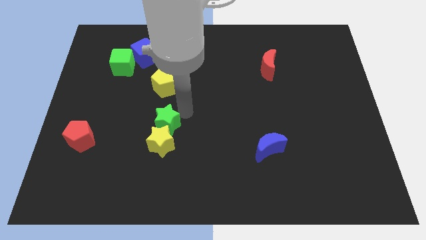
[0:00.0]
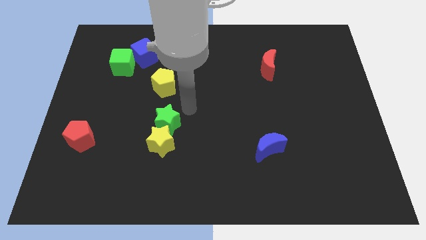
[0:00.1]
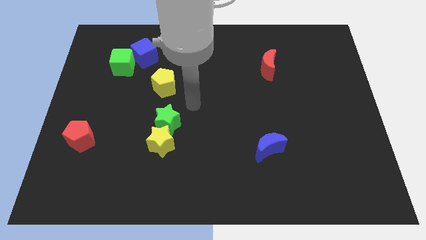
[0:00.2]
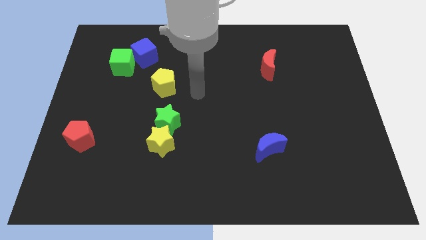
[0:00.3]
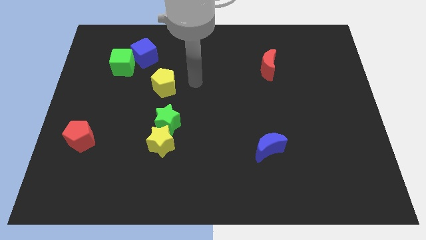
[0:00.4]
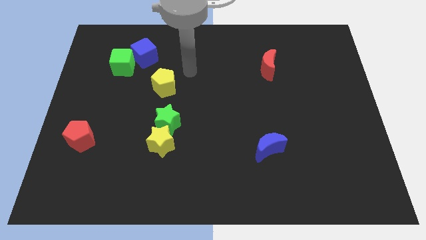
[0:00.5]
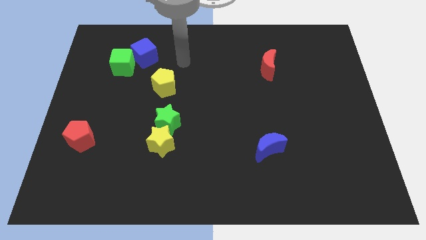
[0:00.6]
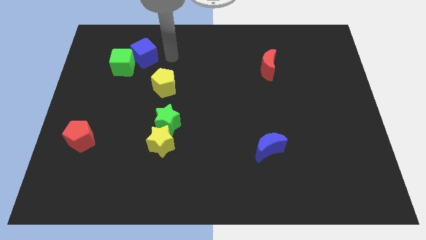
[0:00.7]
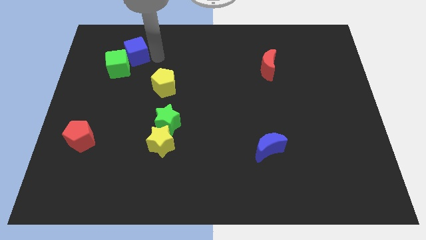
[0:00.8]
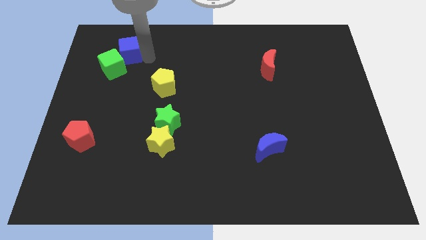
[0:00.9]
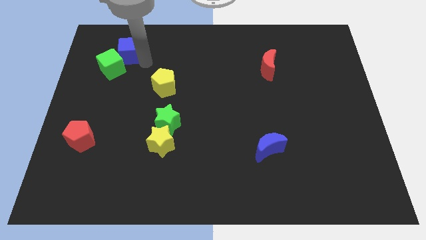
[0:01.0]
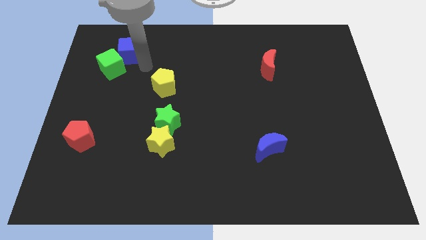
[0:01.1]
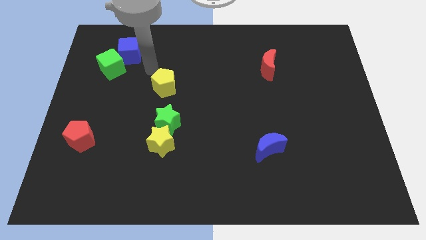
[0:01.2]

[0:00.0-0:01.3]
slightly push the blue cube along with the green cube to the left

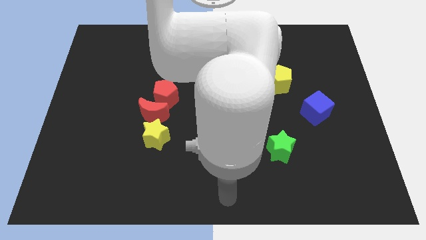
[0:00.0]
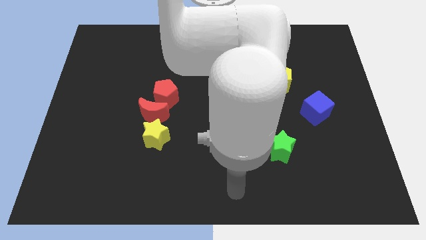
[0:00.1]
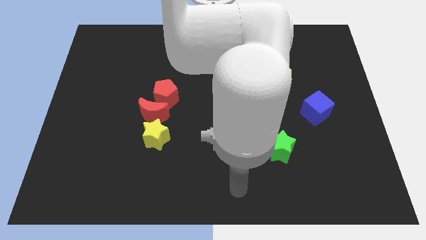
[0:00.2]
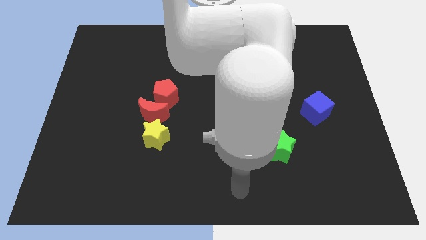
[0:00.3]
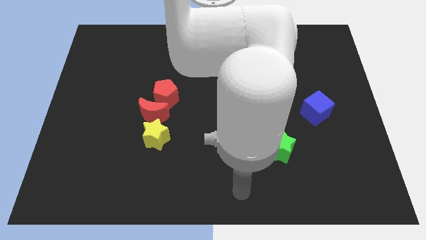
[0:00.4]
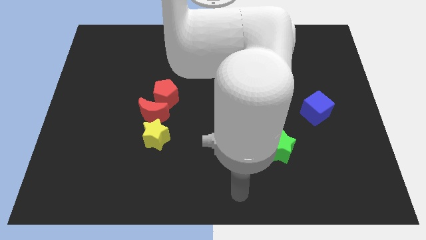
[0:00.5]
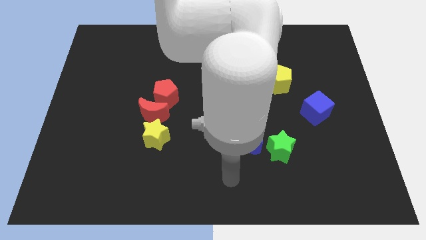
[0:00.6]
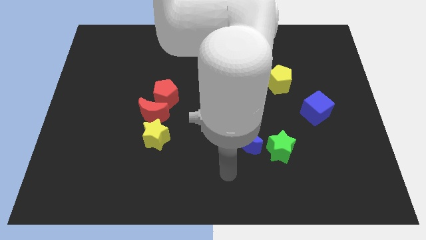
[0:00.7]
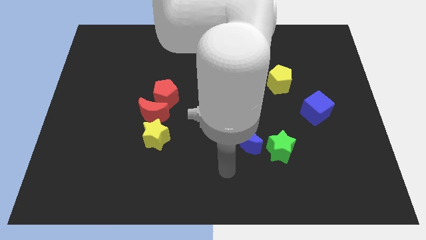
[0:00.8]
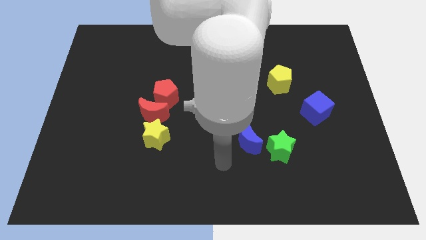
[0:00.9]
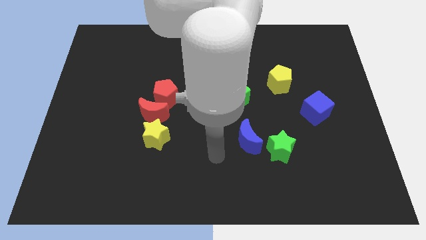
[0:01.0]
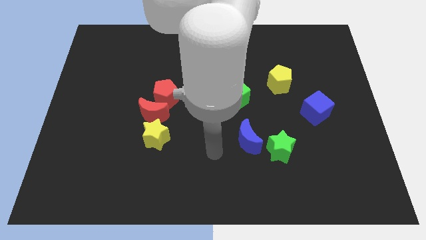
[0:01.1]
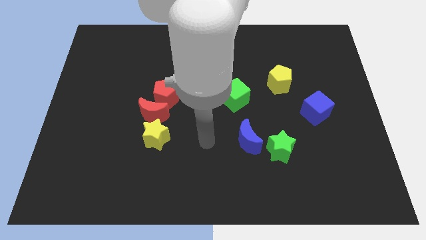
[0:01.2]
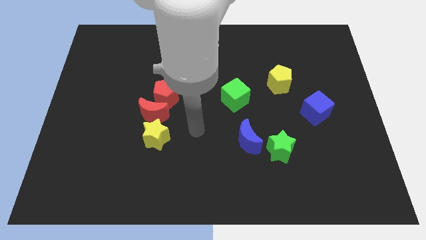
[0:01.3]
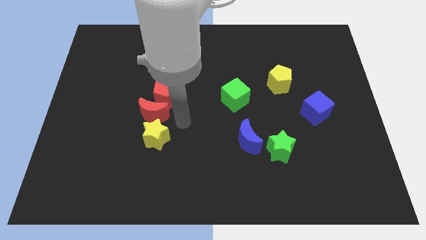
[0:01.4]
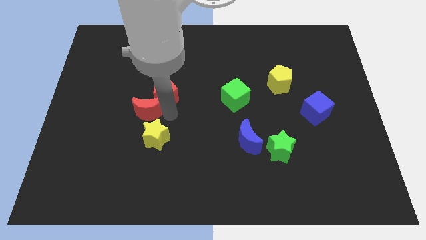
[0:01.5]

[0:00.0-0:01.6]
place your hand to the right of the red moon

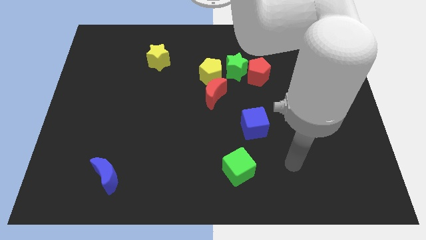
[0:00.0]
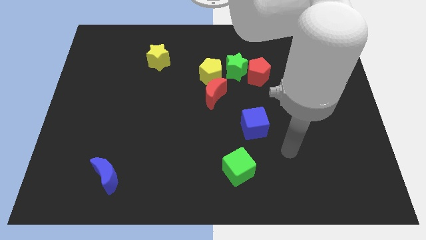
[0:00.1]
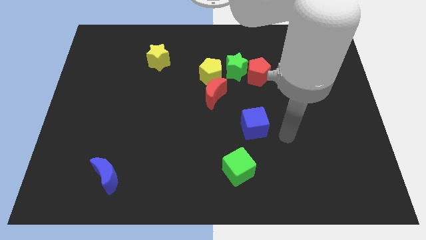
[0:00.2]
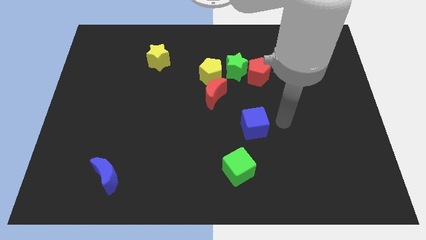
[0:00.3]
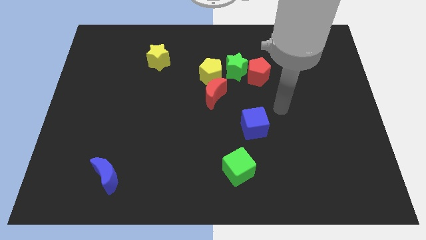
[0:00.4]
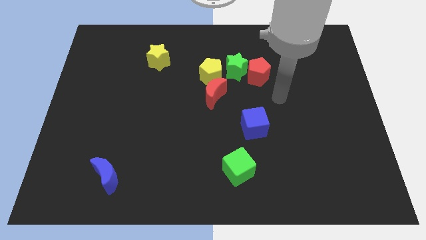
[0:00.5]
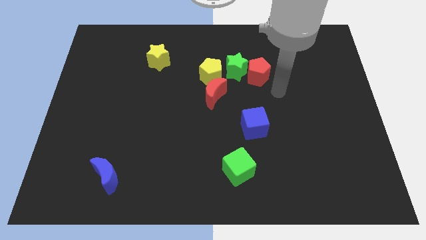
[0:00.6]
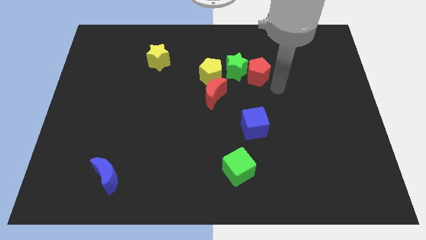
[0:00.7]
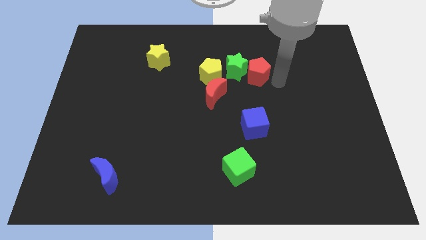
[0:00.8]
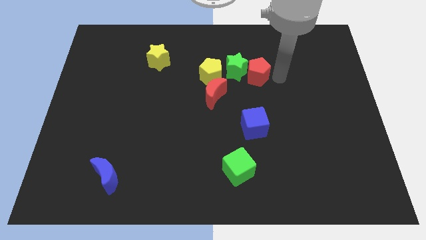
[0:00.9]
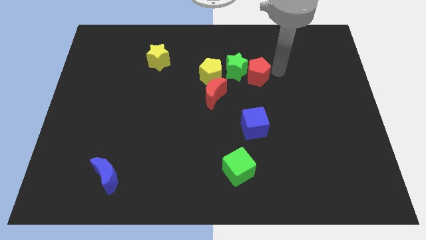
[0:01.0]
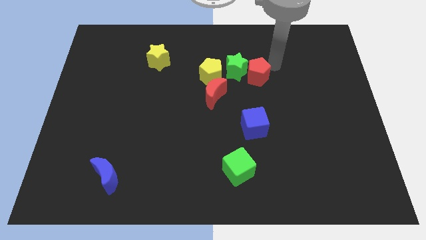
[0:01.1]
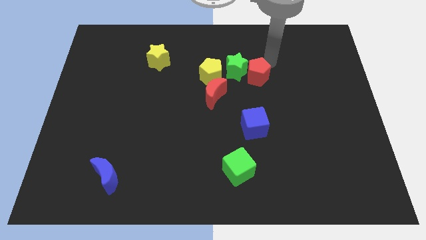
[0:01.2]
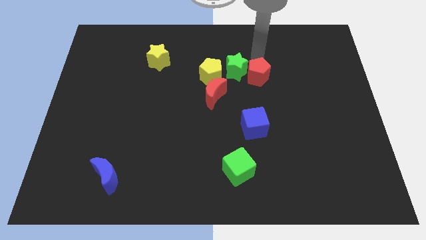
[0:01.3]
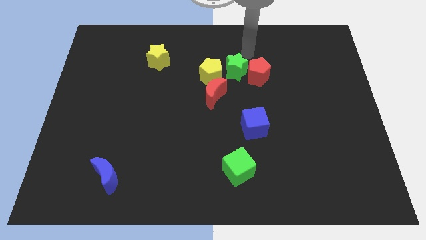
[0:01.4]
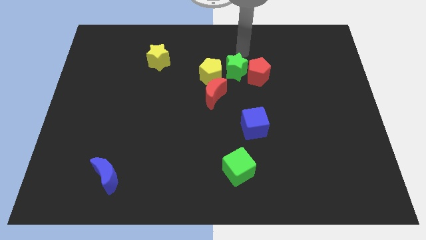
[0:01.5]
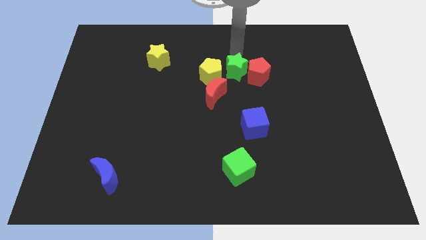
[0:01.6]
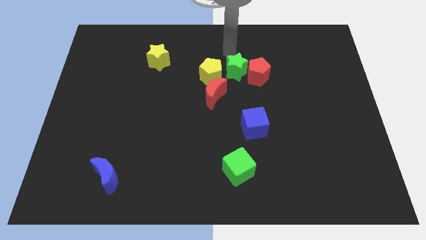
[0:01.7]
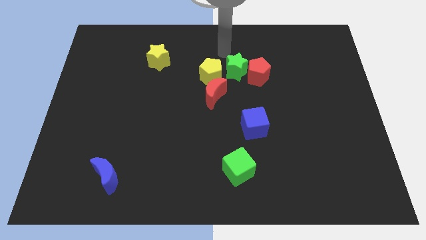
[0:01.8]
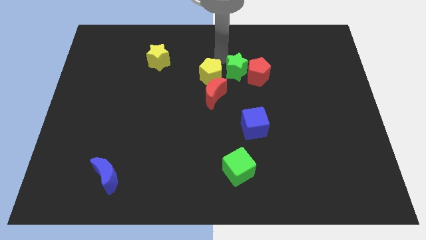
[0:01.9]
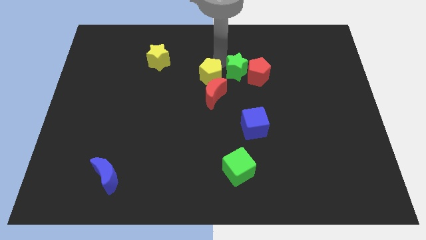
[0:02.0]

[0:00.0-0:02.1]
move your arm above green star and yellow star

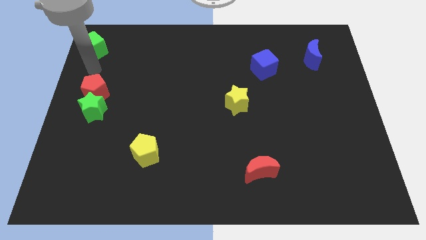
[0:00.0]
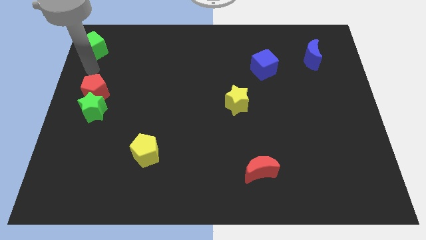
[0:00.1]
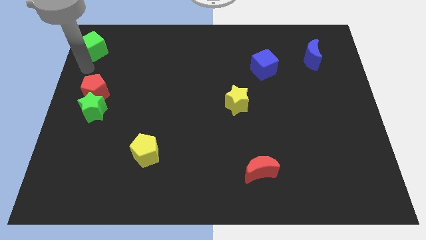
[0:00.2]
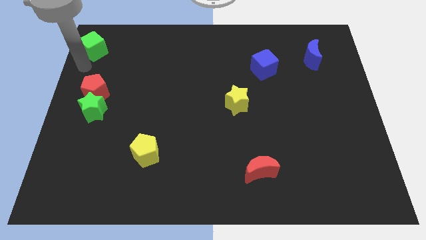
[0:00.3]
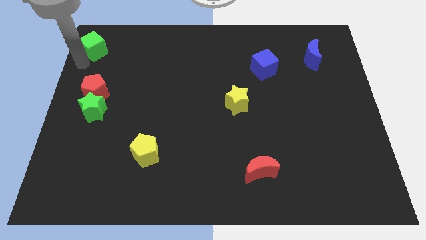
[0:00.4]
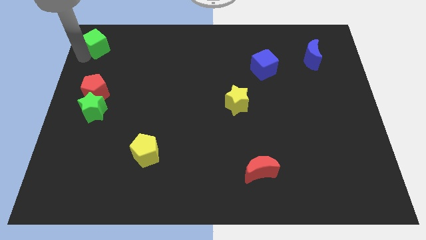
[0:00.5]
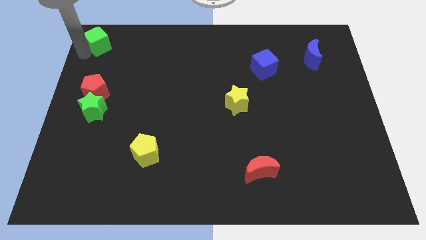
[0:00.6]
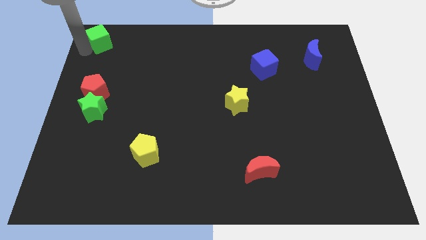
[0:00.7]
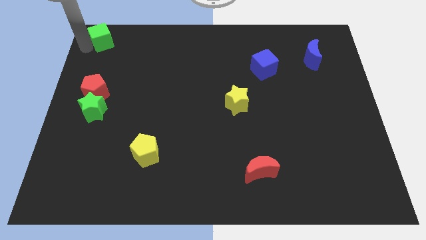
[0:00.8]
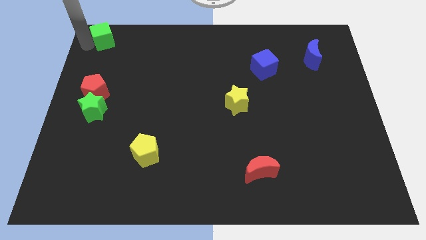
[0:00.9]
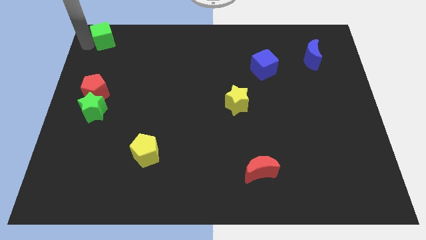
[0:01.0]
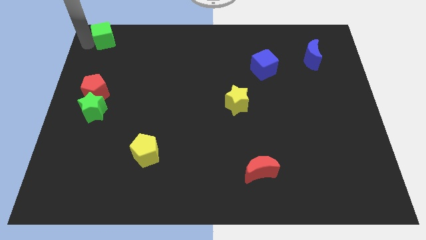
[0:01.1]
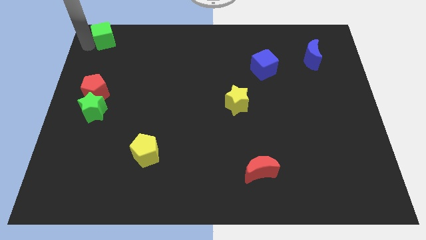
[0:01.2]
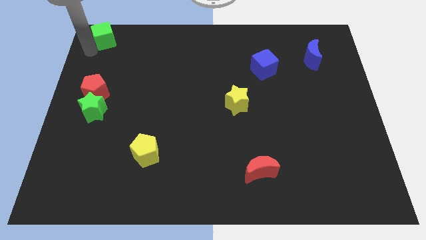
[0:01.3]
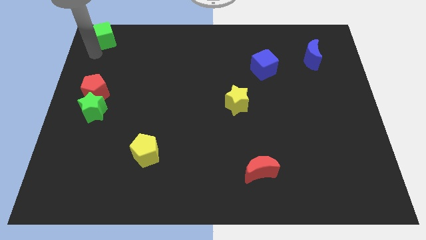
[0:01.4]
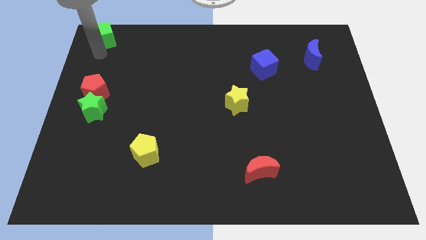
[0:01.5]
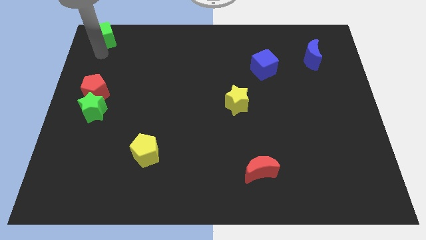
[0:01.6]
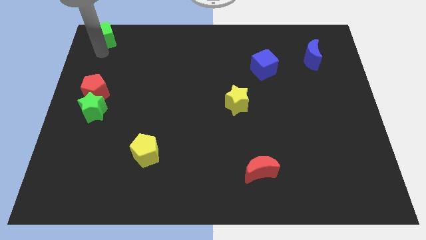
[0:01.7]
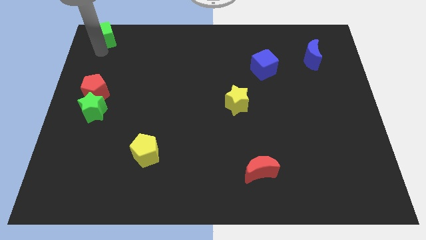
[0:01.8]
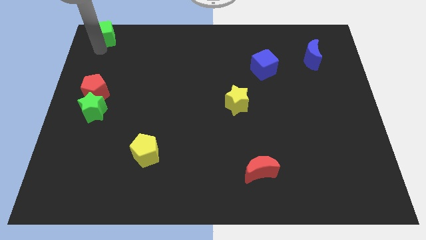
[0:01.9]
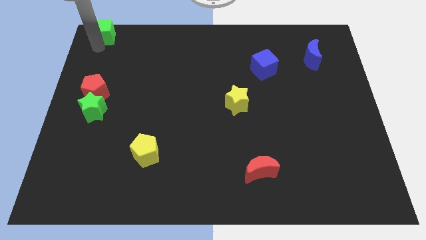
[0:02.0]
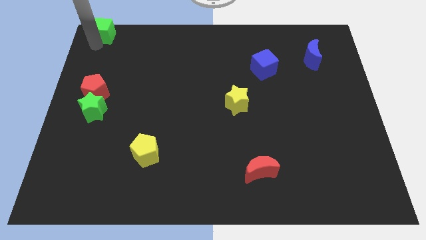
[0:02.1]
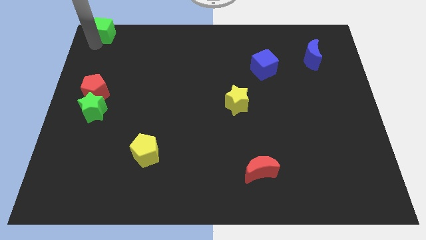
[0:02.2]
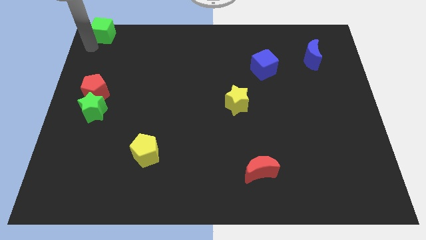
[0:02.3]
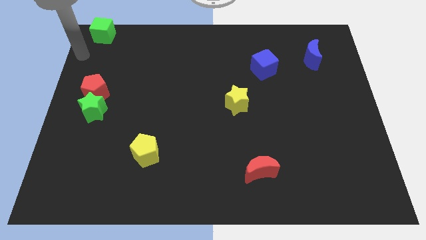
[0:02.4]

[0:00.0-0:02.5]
slide the green cube to the top left side

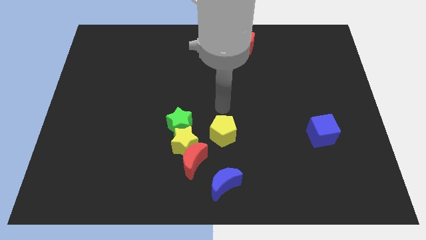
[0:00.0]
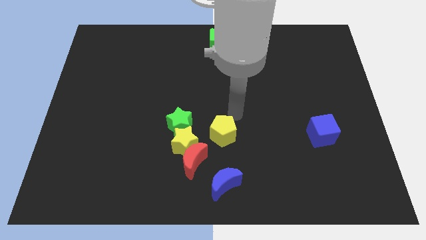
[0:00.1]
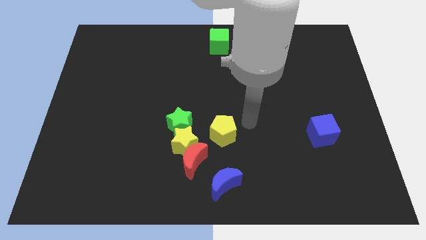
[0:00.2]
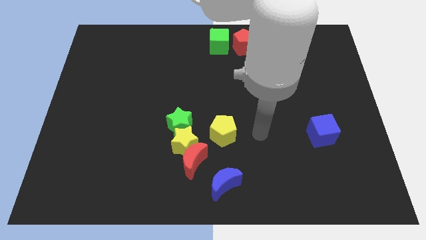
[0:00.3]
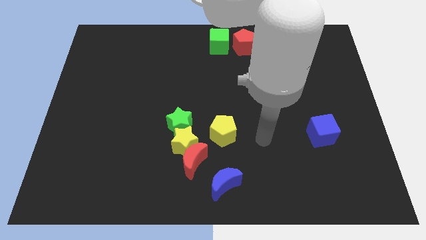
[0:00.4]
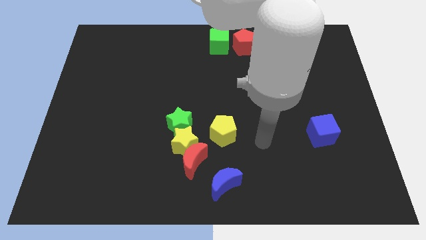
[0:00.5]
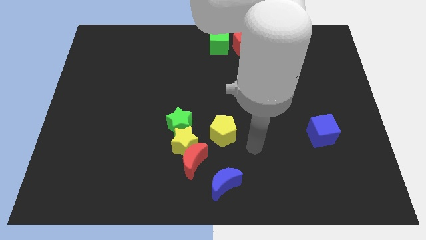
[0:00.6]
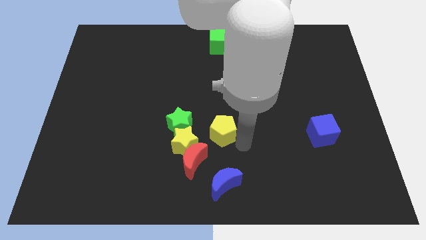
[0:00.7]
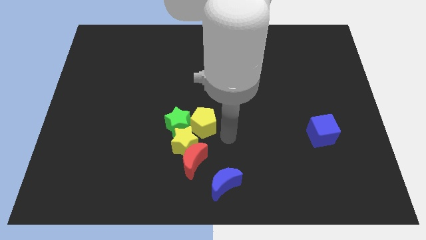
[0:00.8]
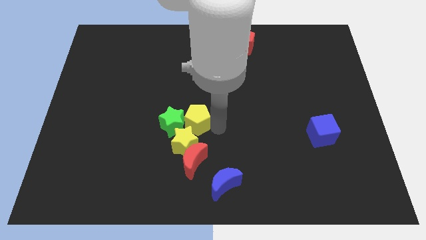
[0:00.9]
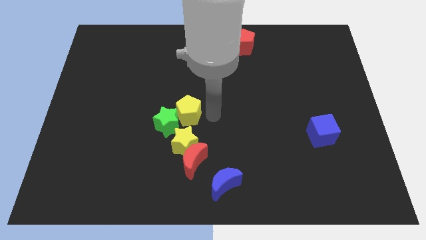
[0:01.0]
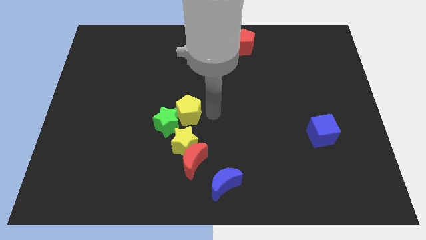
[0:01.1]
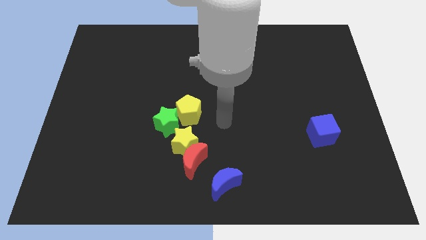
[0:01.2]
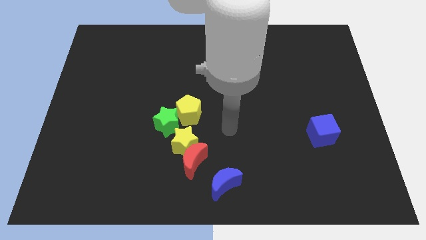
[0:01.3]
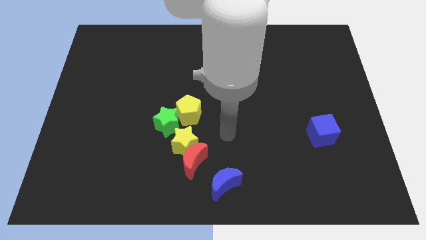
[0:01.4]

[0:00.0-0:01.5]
push the yellow pentagon into the green star
